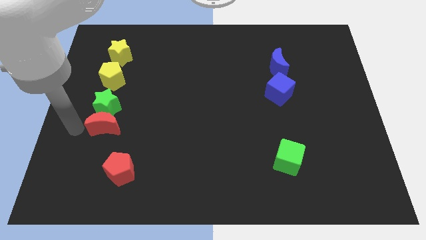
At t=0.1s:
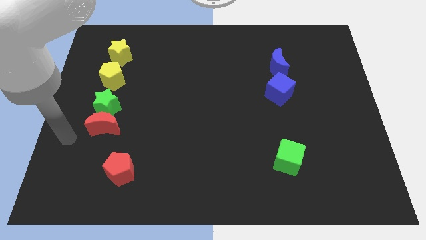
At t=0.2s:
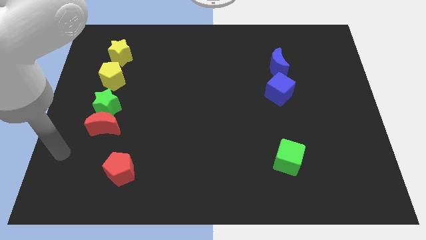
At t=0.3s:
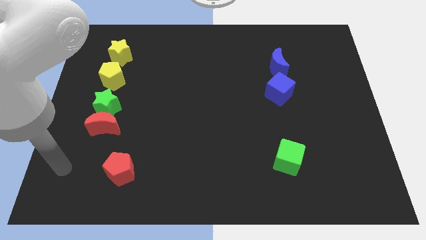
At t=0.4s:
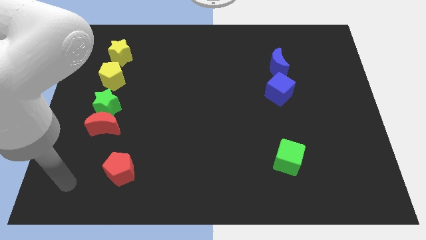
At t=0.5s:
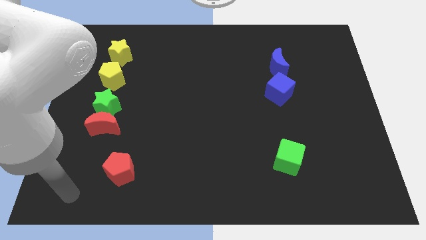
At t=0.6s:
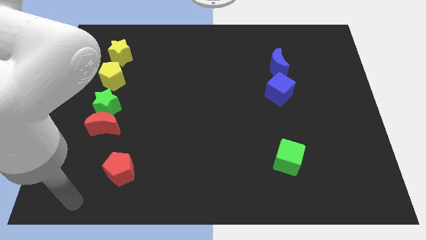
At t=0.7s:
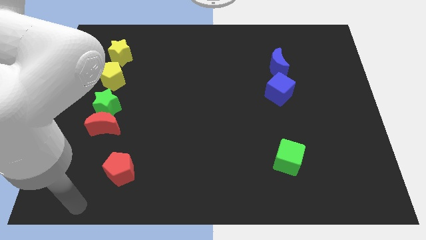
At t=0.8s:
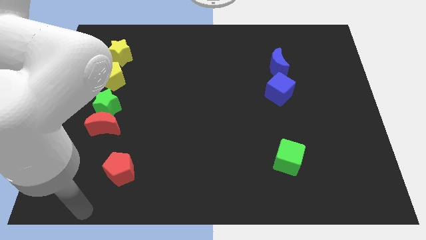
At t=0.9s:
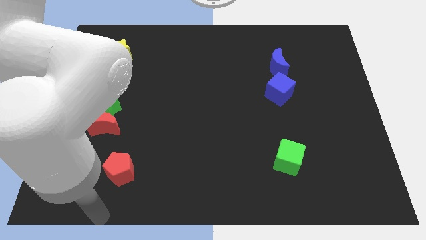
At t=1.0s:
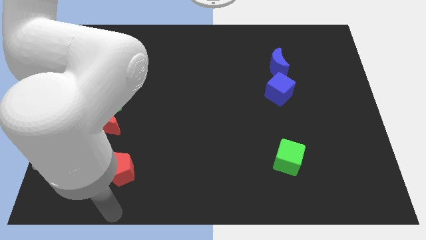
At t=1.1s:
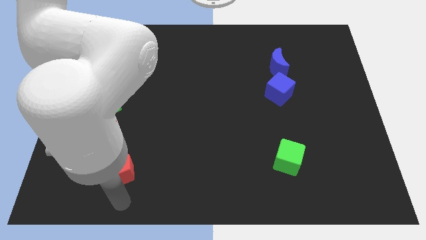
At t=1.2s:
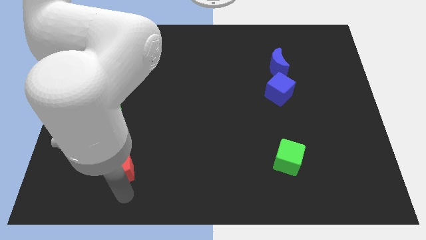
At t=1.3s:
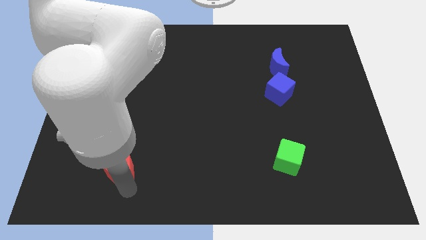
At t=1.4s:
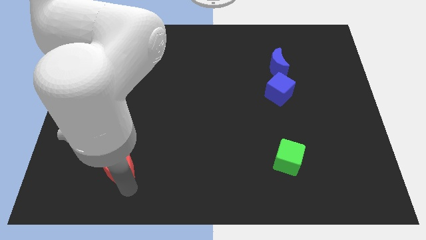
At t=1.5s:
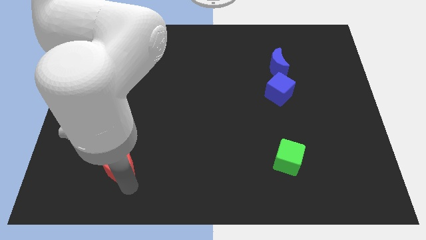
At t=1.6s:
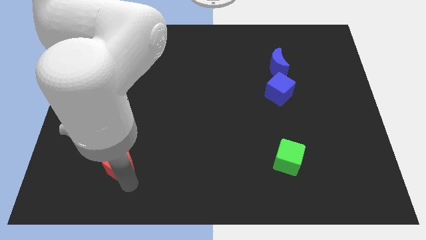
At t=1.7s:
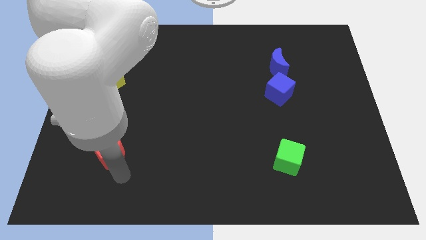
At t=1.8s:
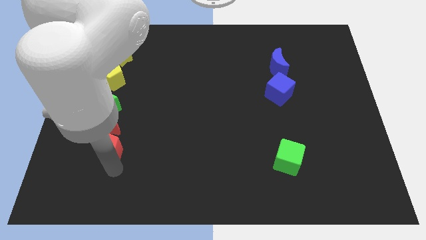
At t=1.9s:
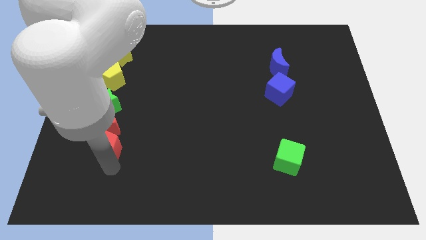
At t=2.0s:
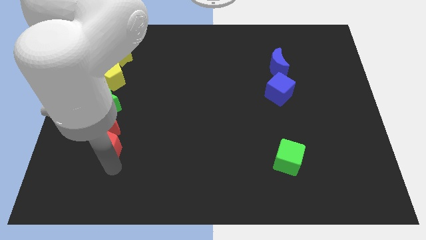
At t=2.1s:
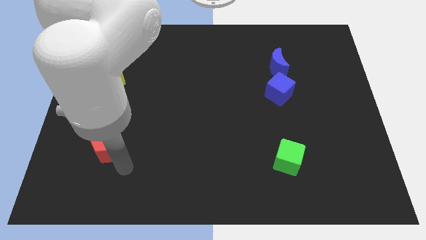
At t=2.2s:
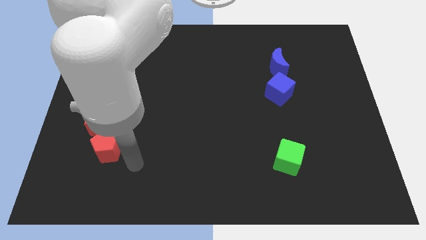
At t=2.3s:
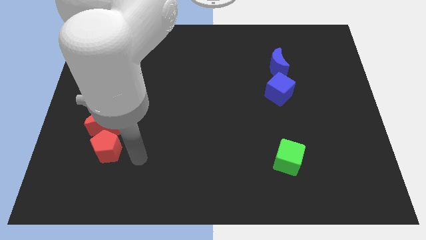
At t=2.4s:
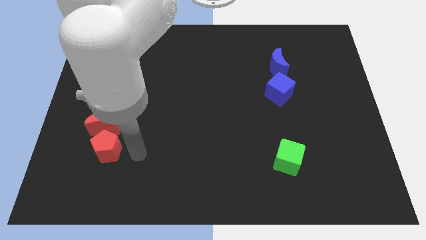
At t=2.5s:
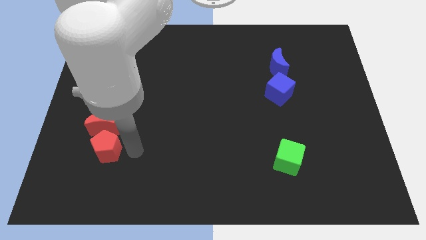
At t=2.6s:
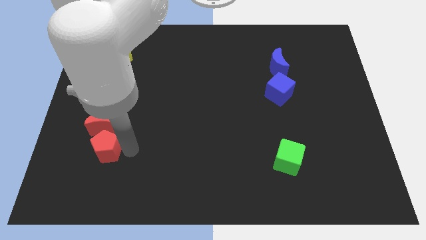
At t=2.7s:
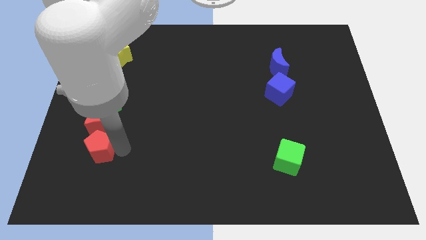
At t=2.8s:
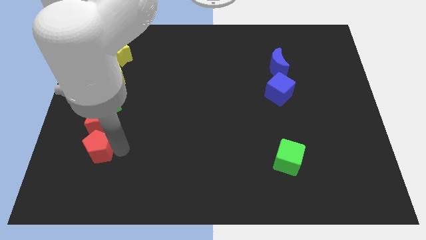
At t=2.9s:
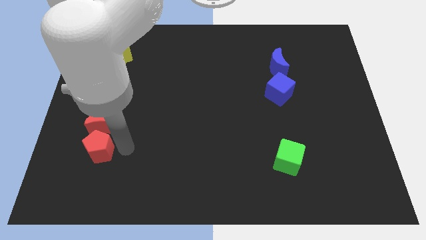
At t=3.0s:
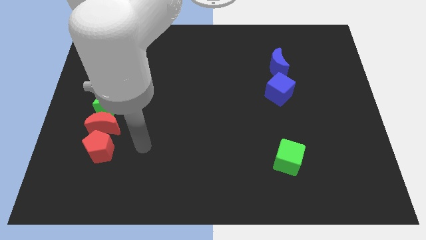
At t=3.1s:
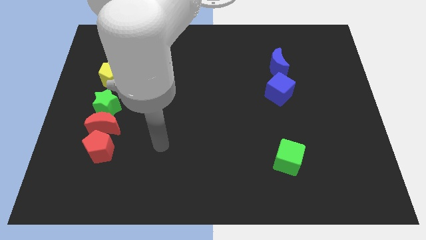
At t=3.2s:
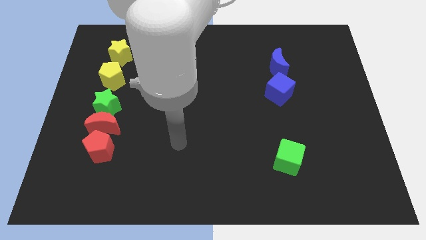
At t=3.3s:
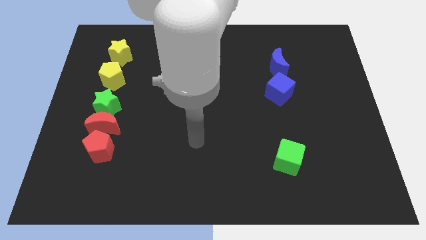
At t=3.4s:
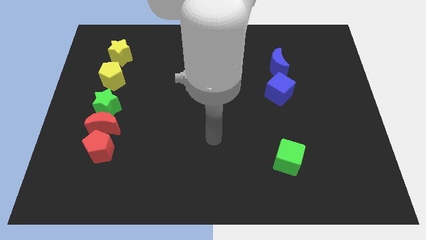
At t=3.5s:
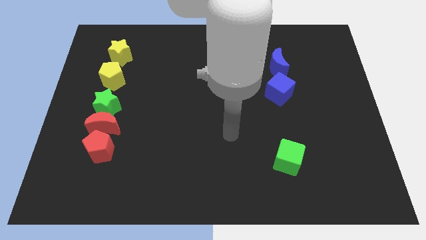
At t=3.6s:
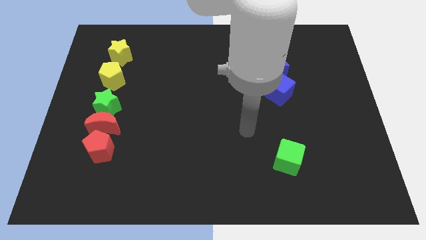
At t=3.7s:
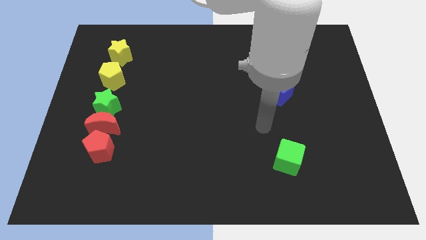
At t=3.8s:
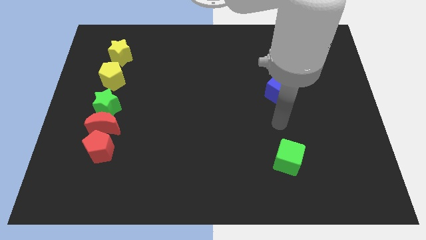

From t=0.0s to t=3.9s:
push the red pentagon close to the red moon

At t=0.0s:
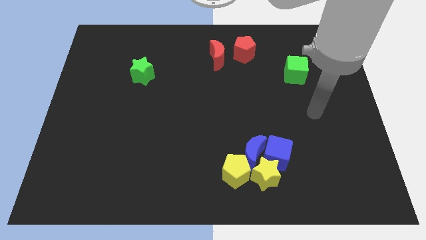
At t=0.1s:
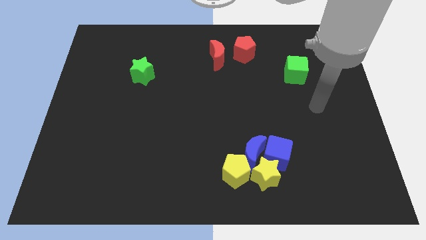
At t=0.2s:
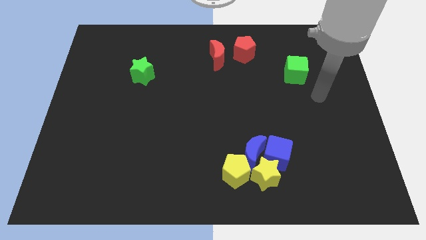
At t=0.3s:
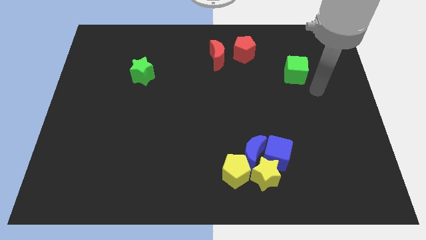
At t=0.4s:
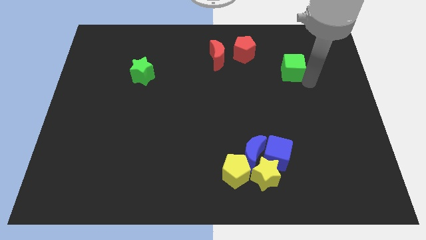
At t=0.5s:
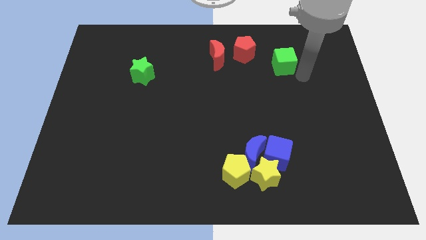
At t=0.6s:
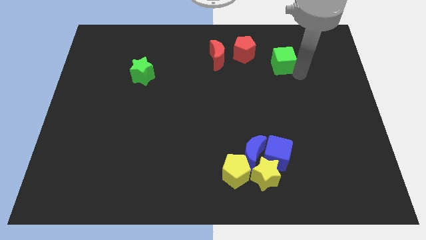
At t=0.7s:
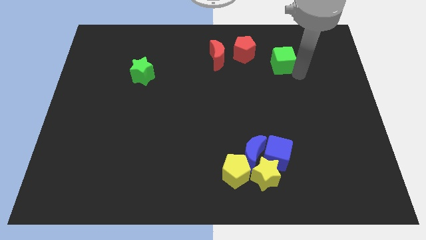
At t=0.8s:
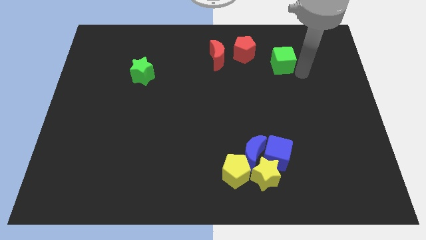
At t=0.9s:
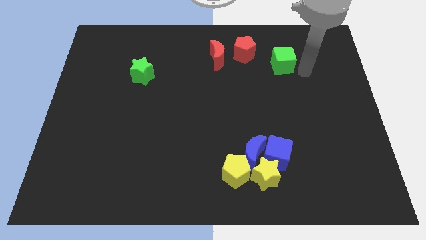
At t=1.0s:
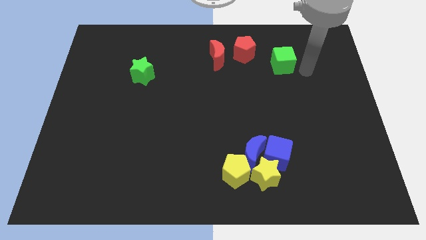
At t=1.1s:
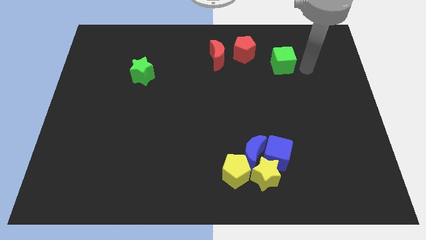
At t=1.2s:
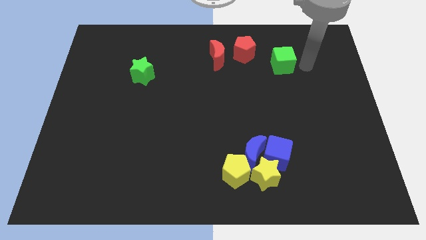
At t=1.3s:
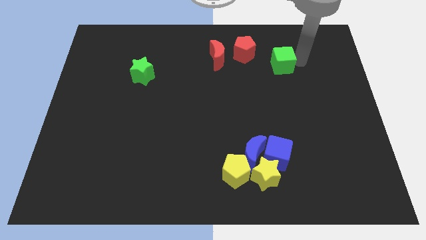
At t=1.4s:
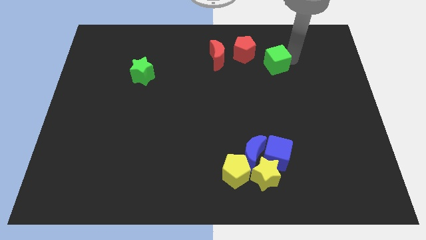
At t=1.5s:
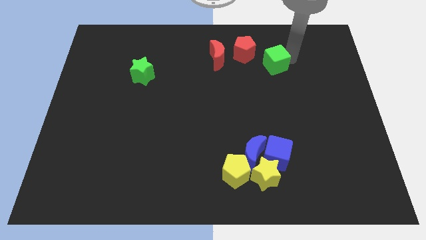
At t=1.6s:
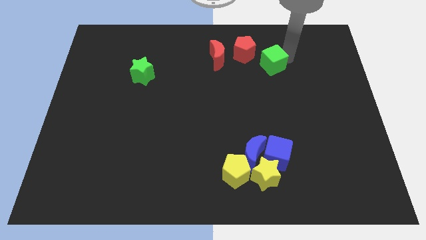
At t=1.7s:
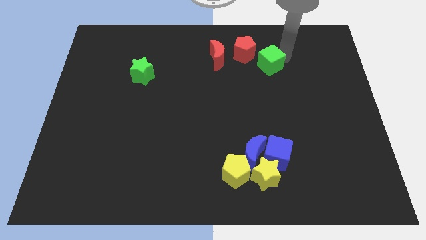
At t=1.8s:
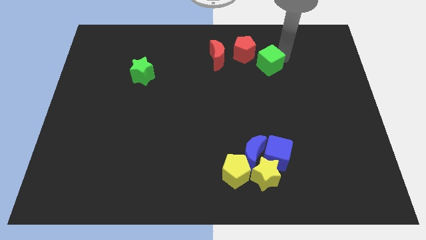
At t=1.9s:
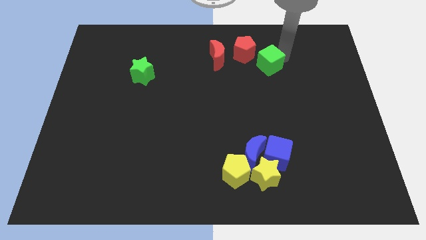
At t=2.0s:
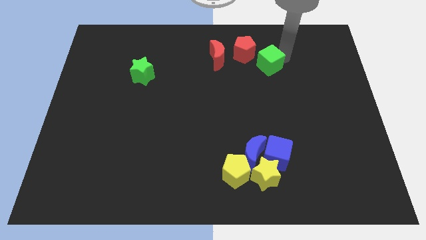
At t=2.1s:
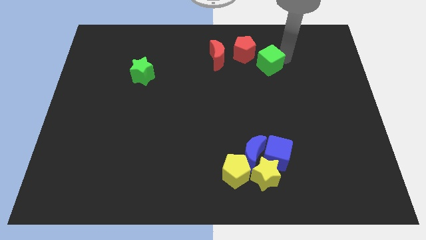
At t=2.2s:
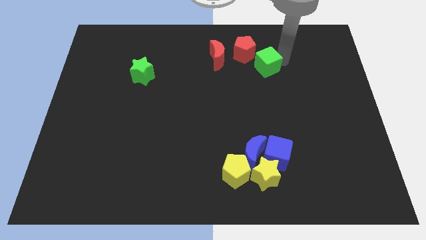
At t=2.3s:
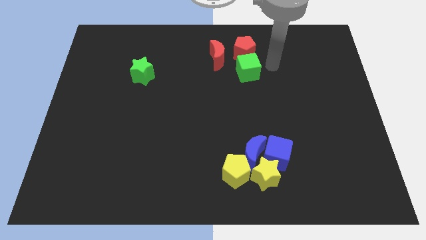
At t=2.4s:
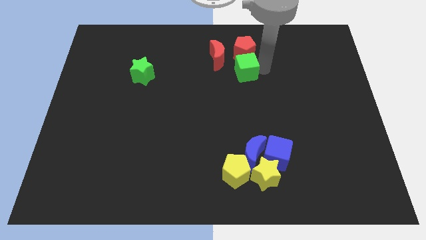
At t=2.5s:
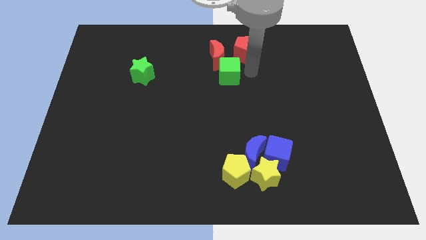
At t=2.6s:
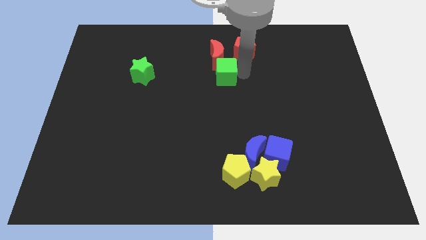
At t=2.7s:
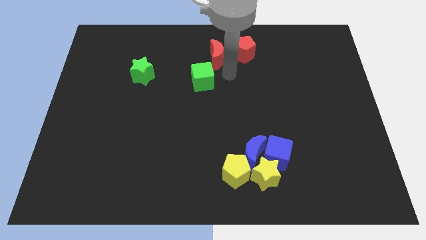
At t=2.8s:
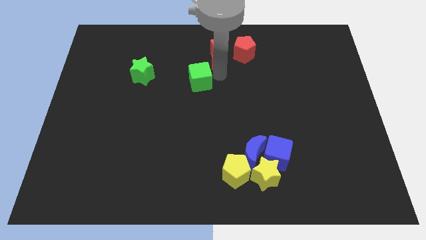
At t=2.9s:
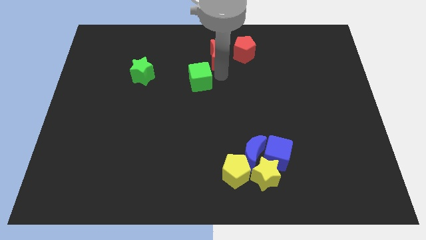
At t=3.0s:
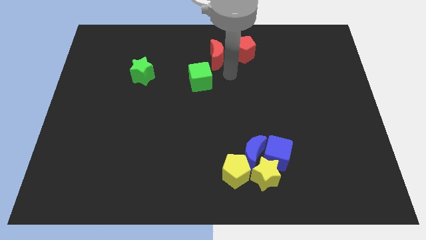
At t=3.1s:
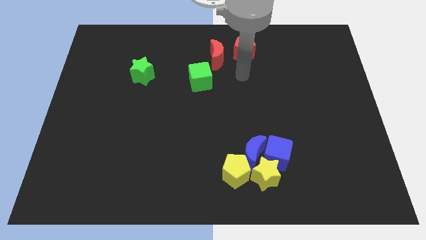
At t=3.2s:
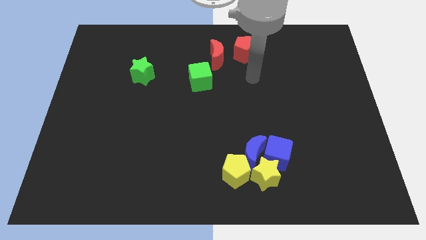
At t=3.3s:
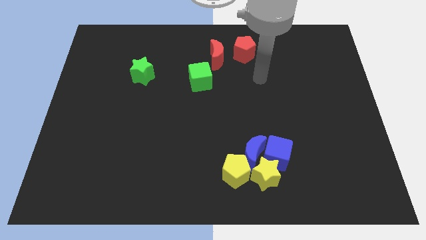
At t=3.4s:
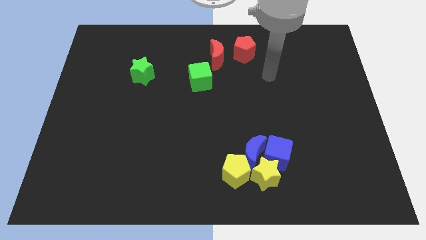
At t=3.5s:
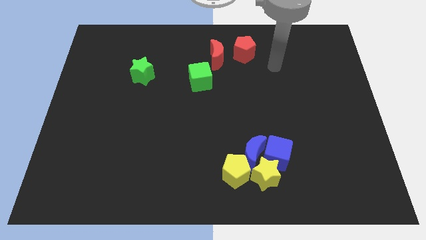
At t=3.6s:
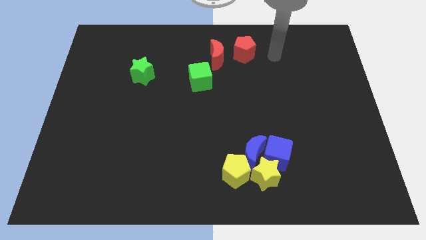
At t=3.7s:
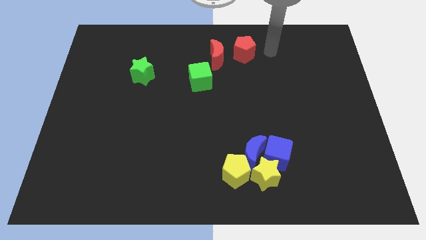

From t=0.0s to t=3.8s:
move the green cube slightly bottom left

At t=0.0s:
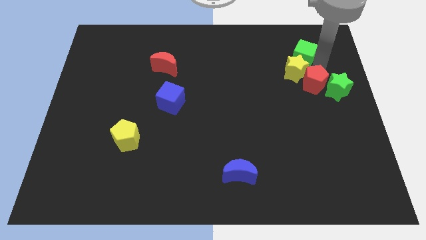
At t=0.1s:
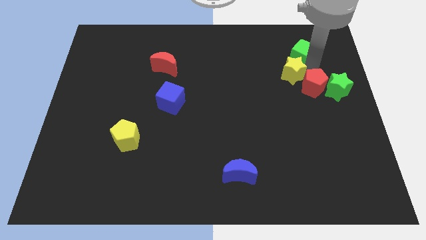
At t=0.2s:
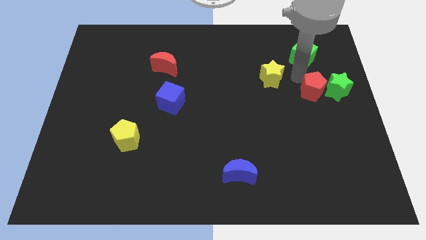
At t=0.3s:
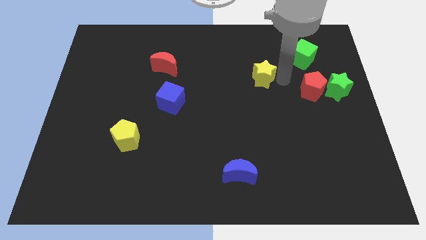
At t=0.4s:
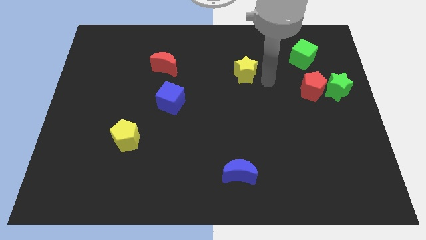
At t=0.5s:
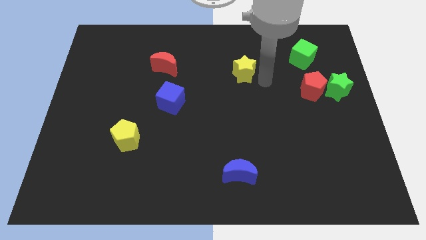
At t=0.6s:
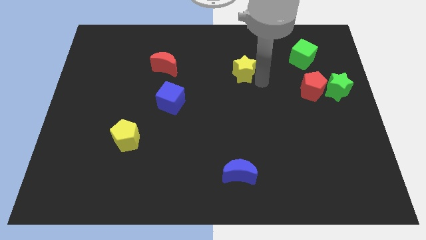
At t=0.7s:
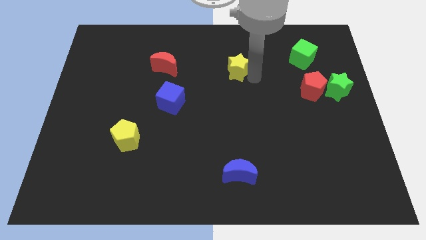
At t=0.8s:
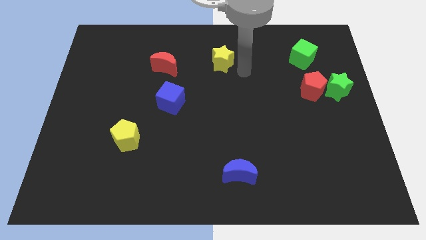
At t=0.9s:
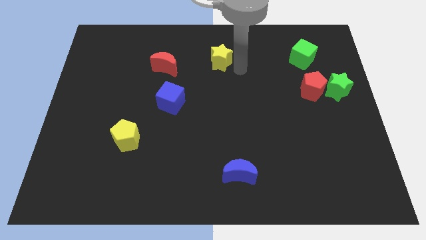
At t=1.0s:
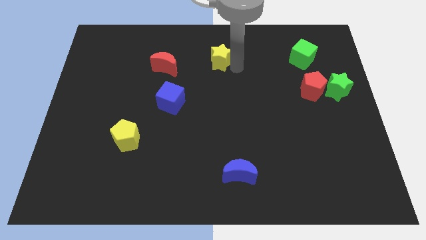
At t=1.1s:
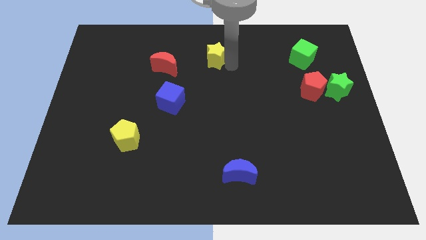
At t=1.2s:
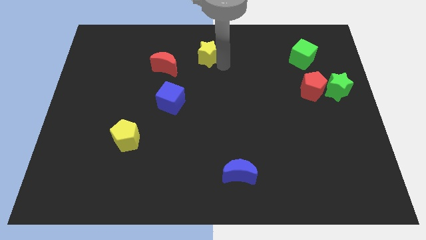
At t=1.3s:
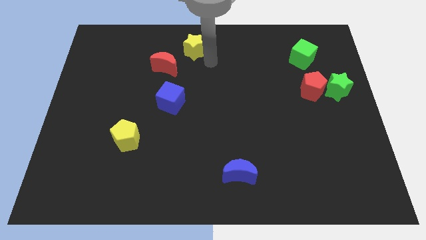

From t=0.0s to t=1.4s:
separate the yellow star from red pentagon
